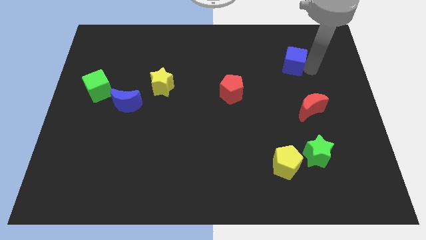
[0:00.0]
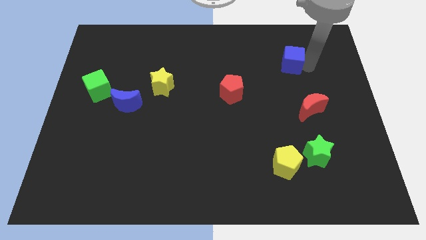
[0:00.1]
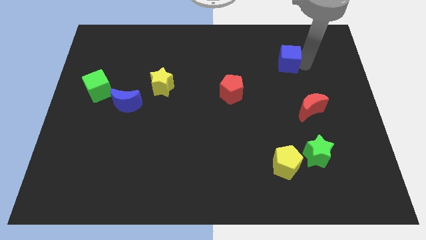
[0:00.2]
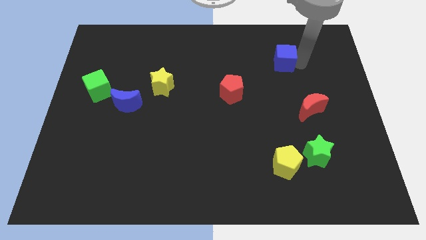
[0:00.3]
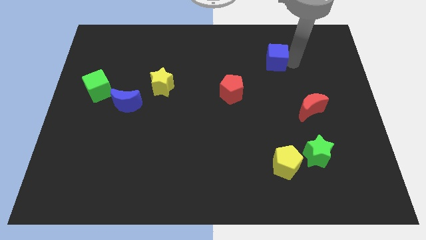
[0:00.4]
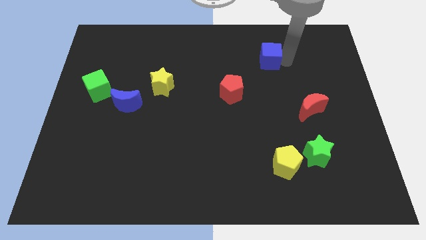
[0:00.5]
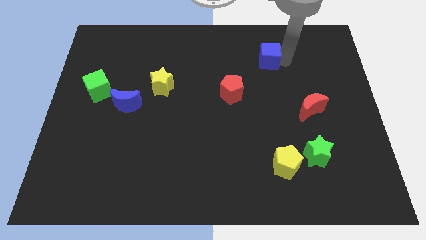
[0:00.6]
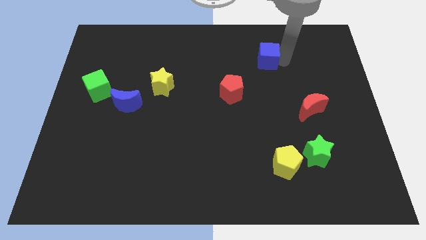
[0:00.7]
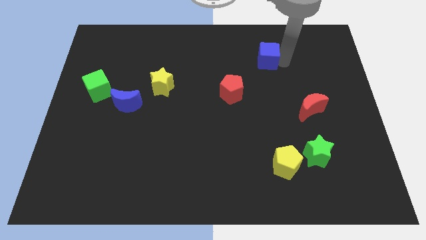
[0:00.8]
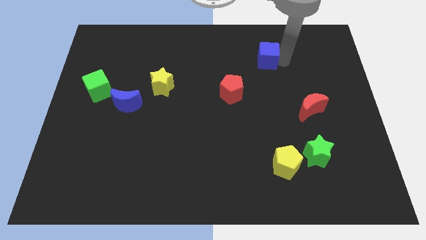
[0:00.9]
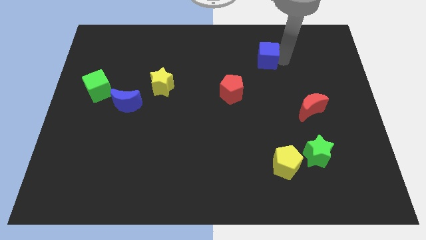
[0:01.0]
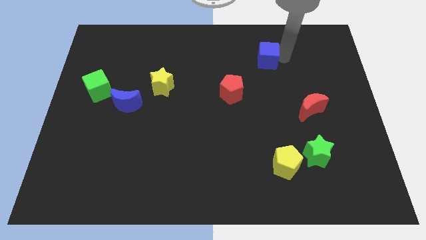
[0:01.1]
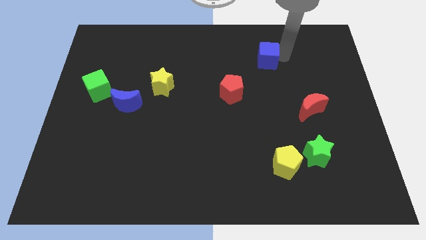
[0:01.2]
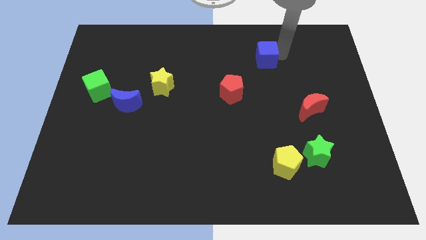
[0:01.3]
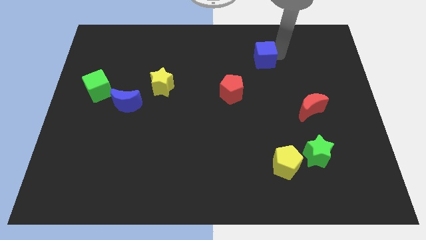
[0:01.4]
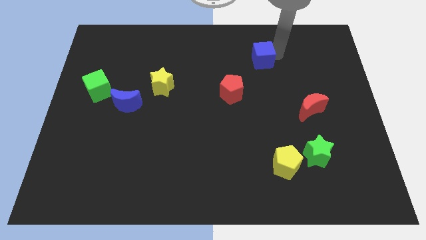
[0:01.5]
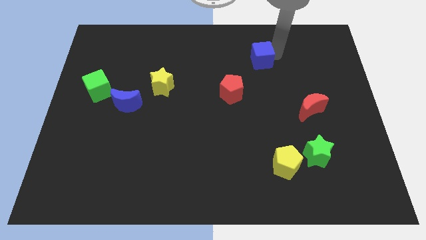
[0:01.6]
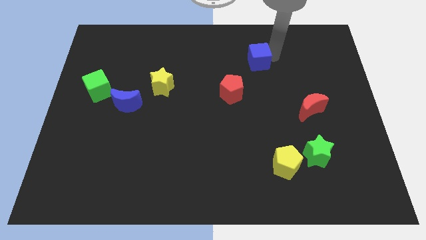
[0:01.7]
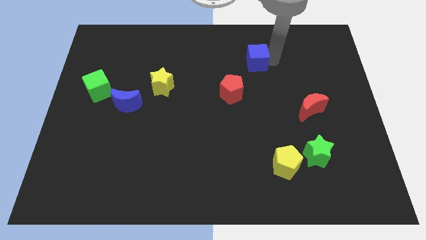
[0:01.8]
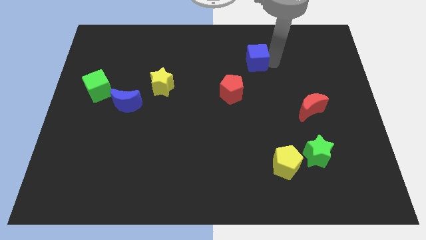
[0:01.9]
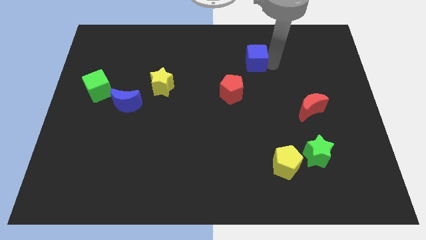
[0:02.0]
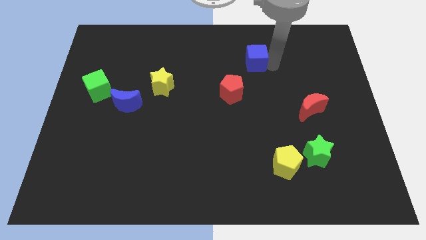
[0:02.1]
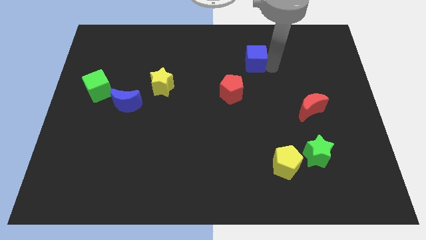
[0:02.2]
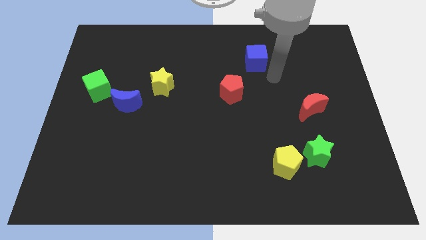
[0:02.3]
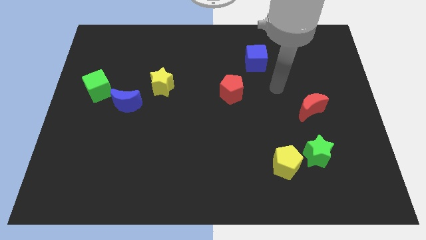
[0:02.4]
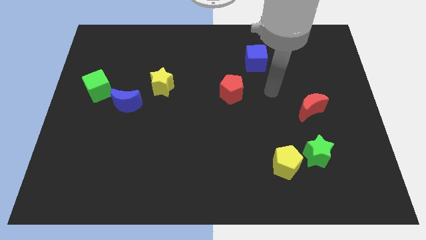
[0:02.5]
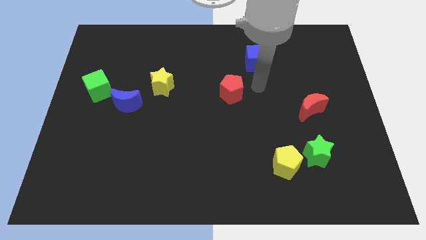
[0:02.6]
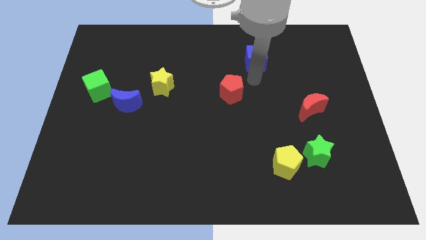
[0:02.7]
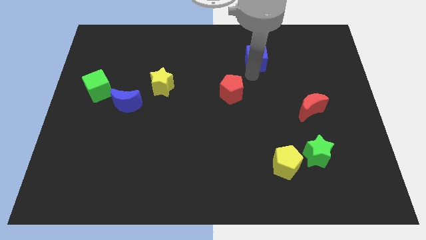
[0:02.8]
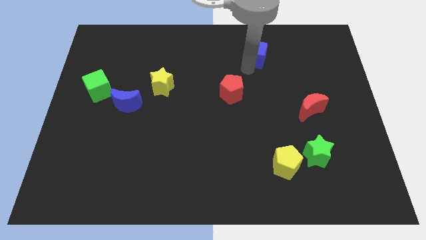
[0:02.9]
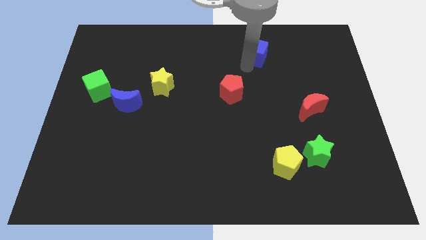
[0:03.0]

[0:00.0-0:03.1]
push blue cube towards left side slightly

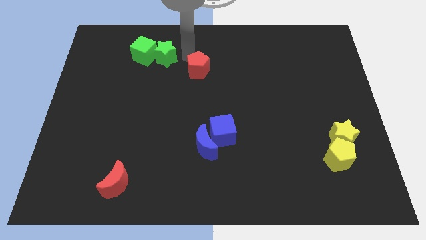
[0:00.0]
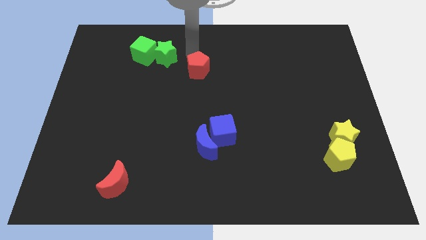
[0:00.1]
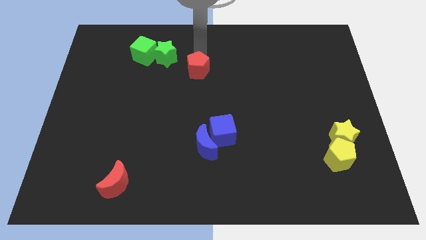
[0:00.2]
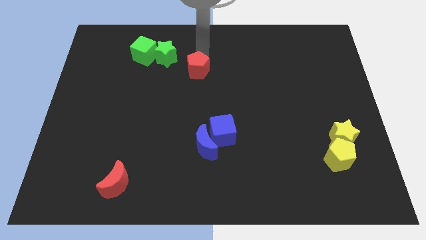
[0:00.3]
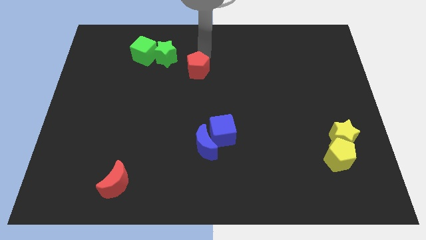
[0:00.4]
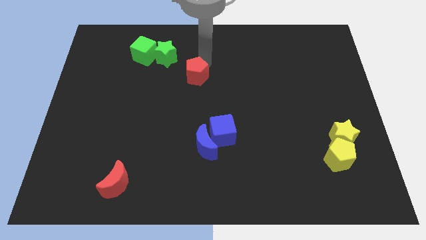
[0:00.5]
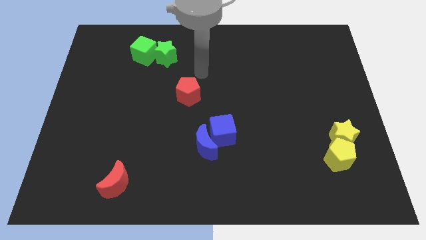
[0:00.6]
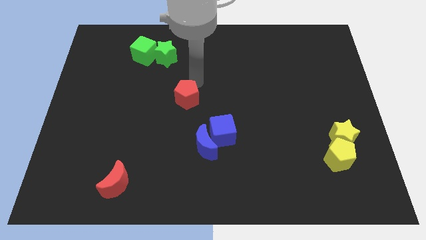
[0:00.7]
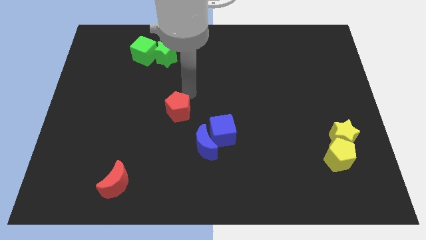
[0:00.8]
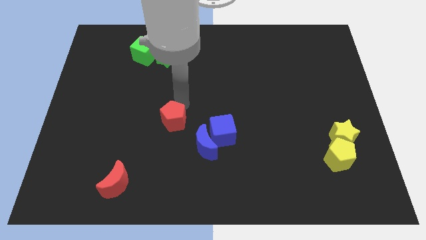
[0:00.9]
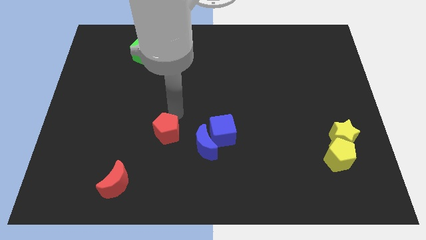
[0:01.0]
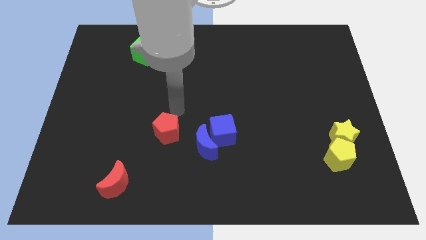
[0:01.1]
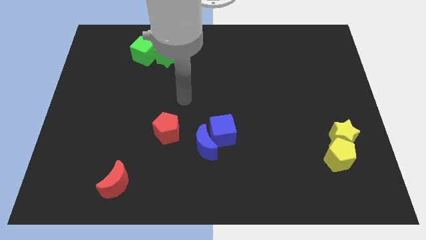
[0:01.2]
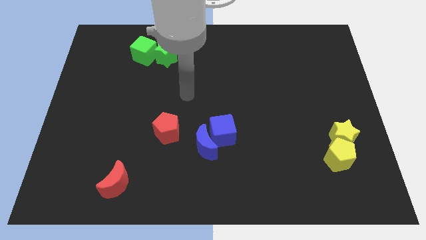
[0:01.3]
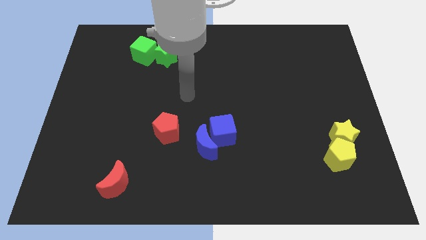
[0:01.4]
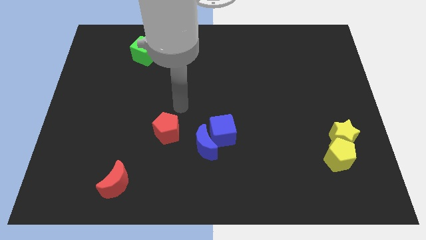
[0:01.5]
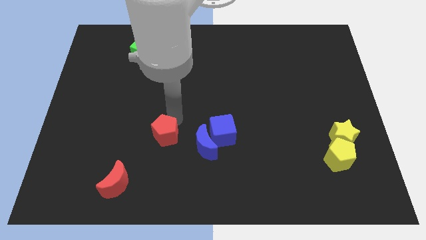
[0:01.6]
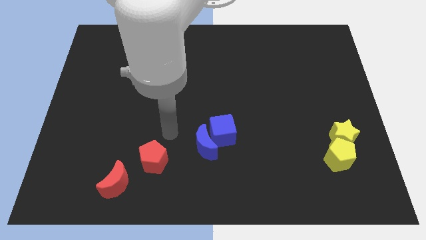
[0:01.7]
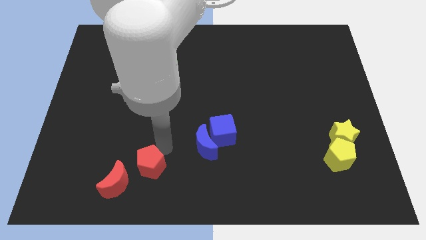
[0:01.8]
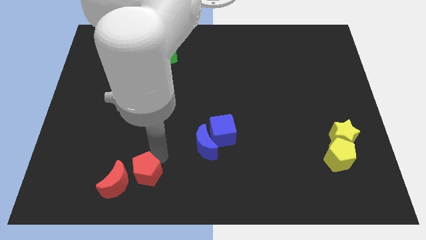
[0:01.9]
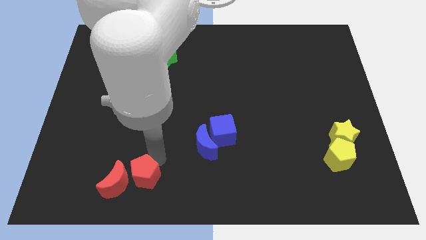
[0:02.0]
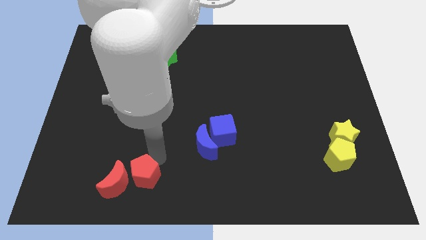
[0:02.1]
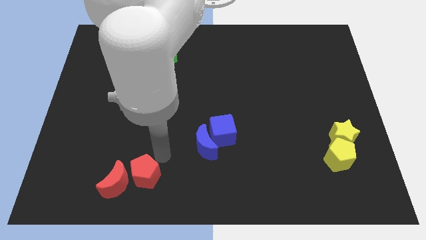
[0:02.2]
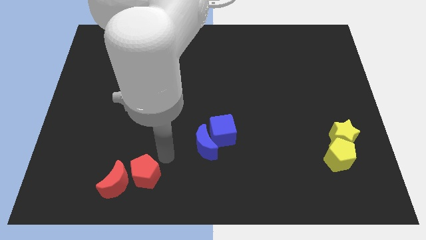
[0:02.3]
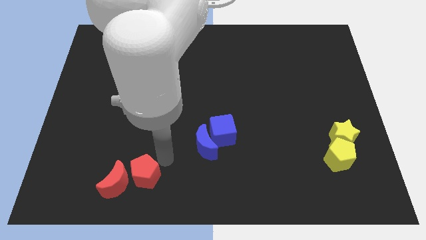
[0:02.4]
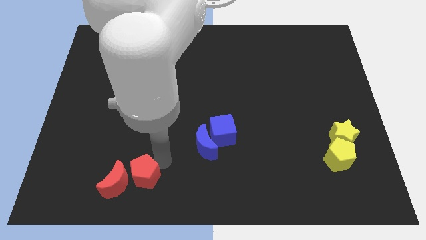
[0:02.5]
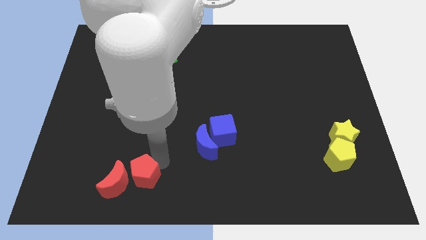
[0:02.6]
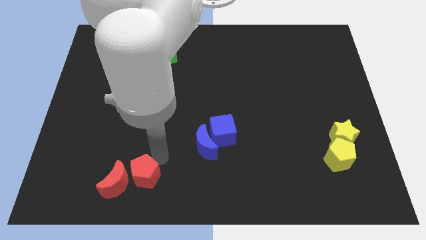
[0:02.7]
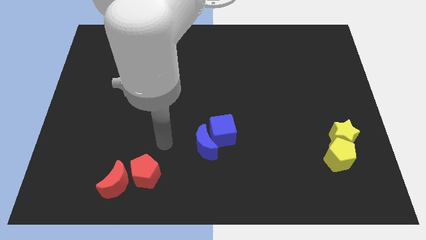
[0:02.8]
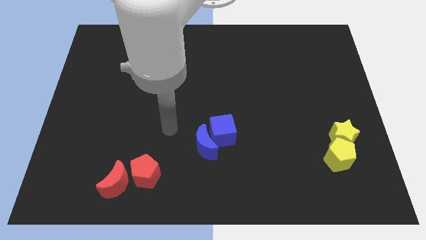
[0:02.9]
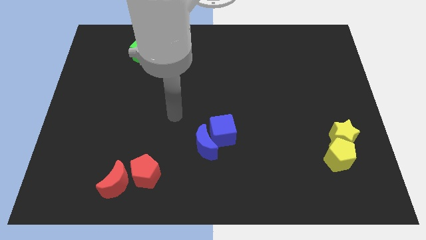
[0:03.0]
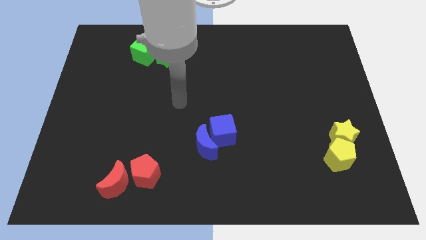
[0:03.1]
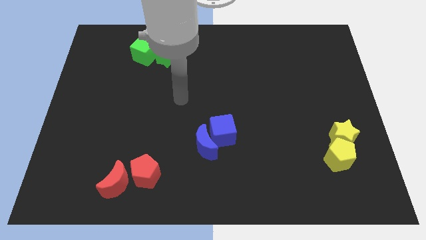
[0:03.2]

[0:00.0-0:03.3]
move the red pentagon to the right of red moon

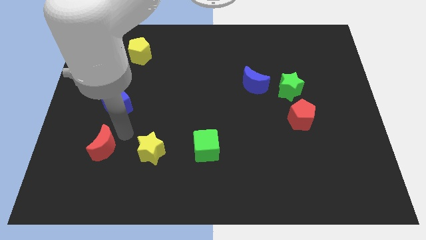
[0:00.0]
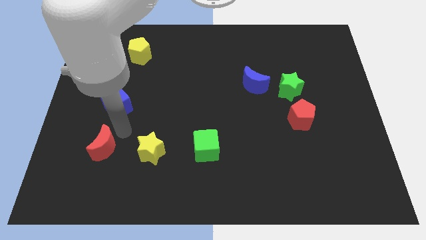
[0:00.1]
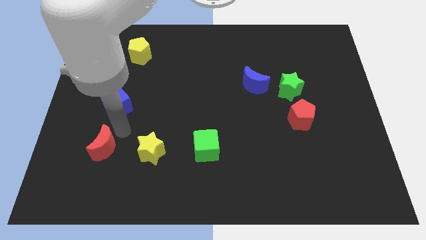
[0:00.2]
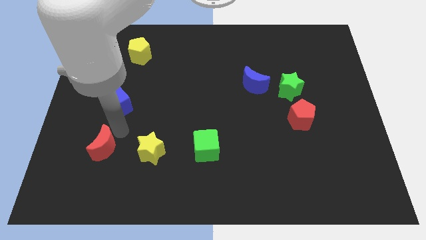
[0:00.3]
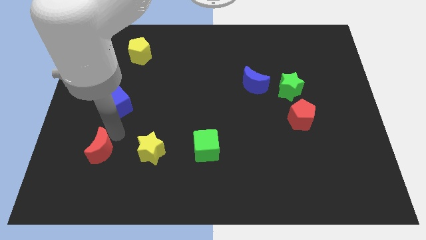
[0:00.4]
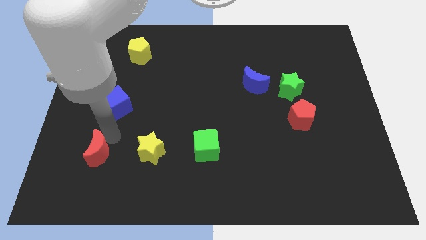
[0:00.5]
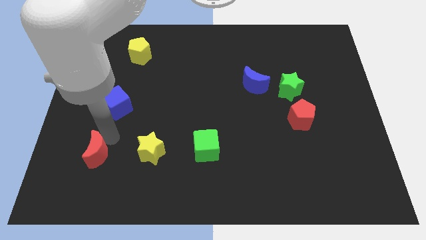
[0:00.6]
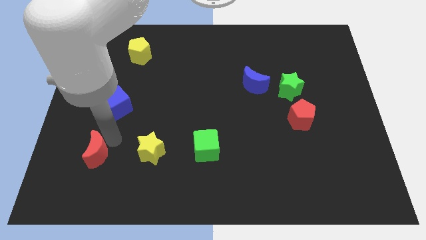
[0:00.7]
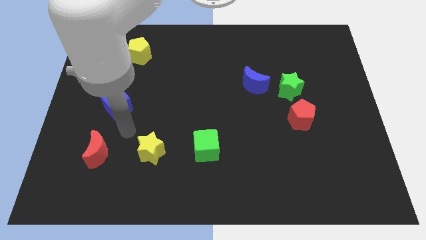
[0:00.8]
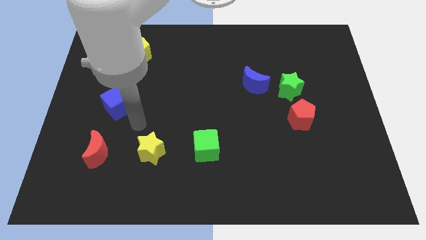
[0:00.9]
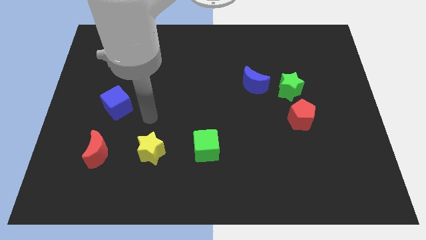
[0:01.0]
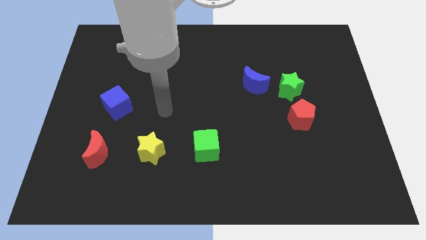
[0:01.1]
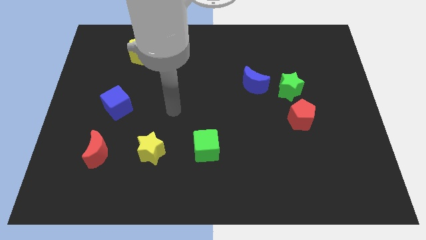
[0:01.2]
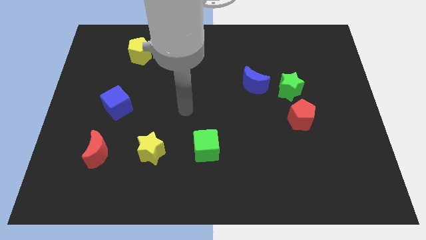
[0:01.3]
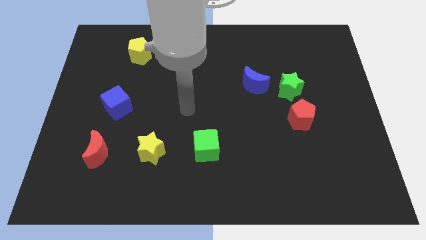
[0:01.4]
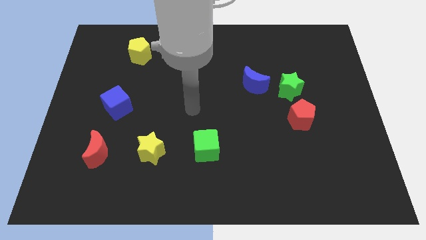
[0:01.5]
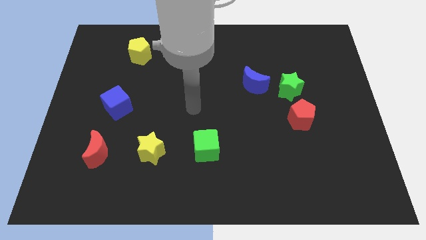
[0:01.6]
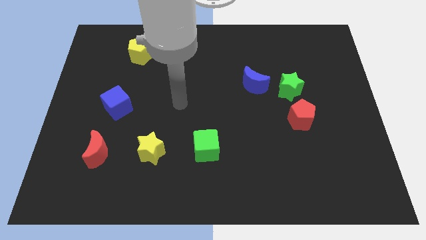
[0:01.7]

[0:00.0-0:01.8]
push the red crescent towards the bottom of the board

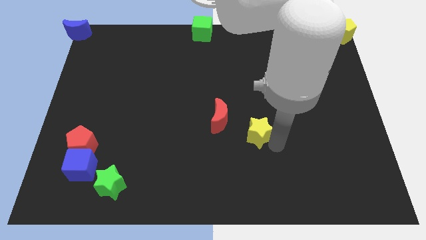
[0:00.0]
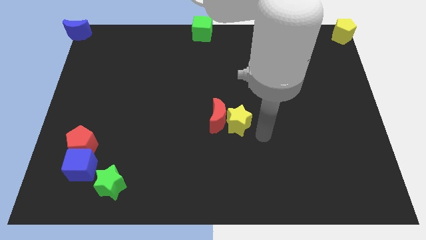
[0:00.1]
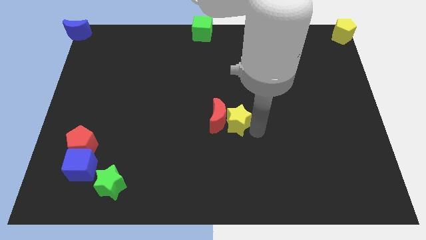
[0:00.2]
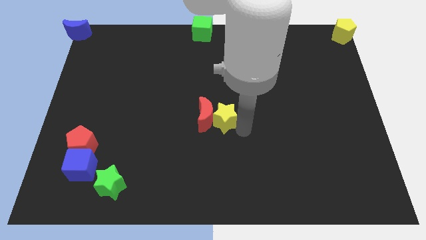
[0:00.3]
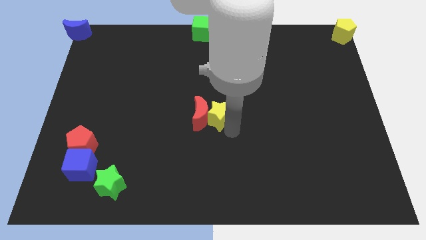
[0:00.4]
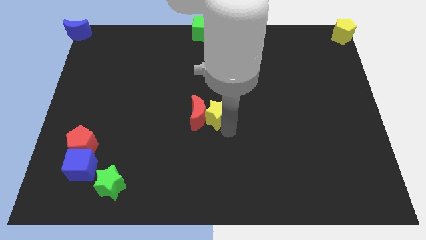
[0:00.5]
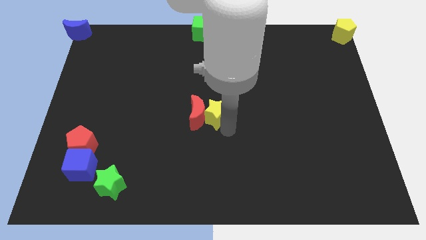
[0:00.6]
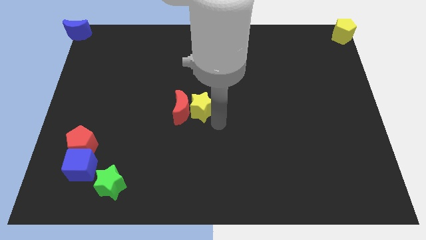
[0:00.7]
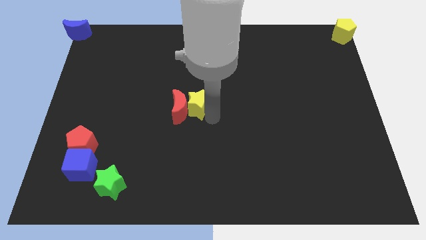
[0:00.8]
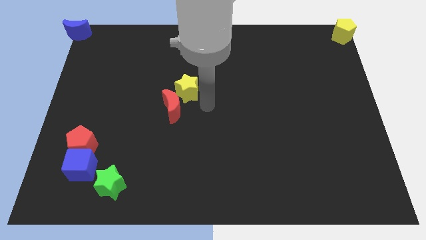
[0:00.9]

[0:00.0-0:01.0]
push the red crescent with yellow star towards the left center of the board
